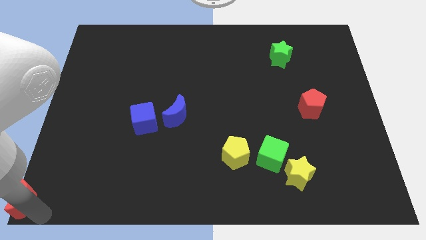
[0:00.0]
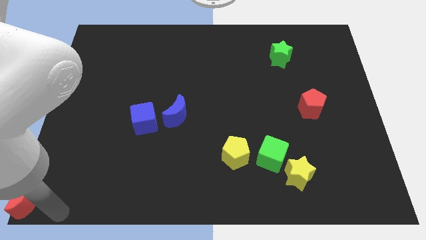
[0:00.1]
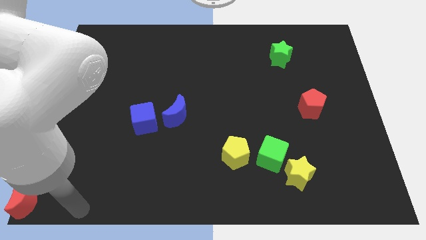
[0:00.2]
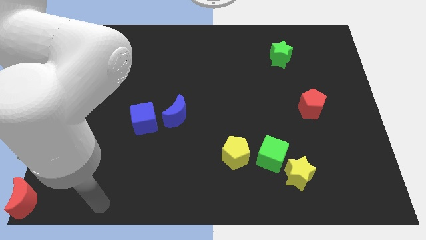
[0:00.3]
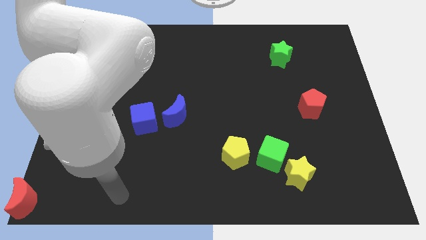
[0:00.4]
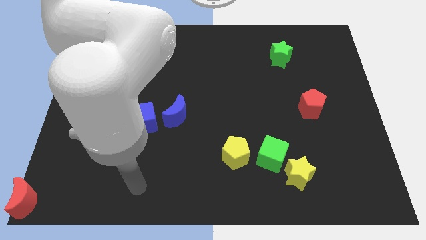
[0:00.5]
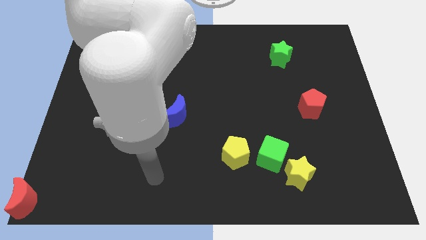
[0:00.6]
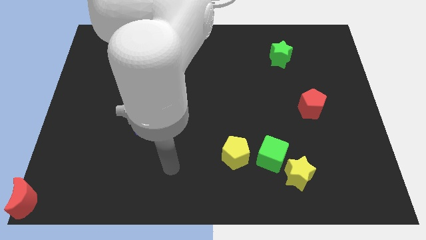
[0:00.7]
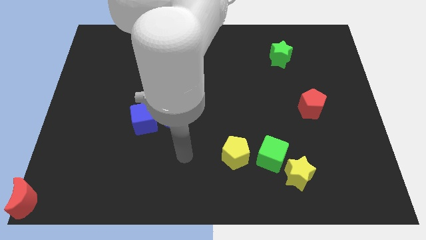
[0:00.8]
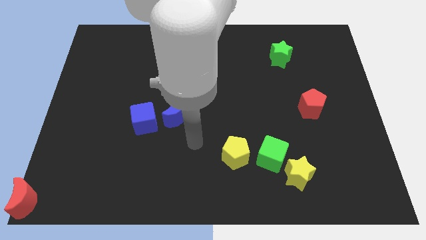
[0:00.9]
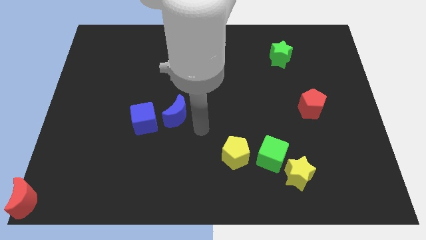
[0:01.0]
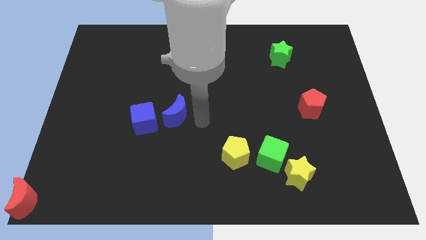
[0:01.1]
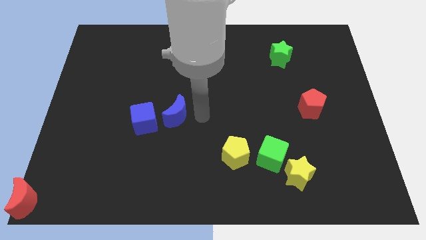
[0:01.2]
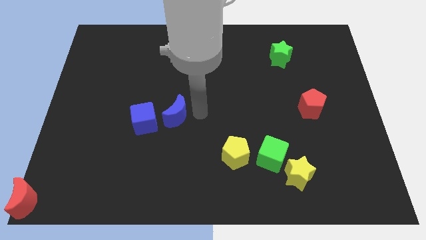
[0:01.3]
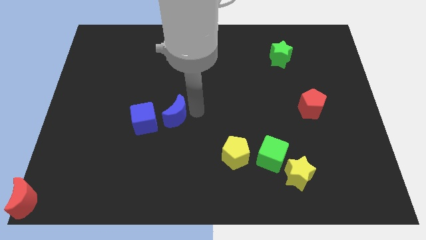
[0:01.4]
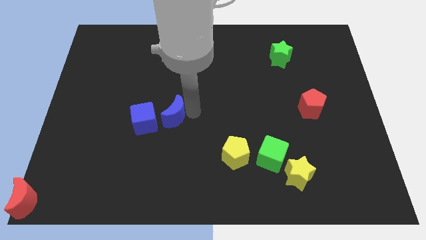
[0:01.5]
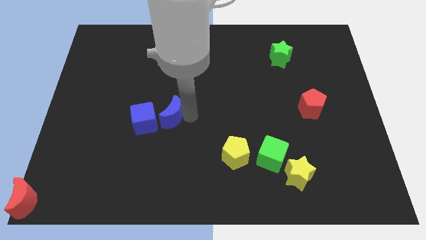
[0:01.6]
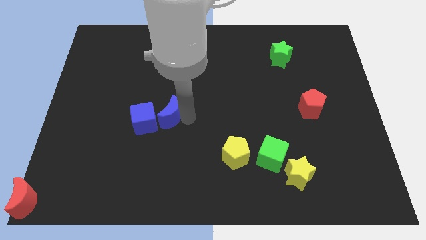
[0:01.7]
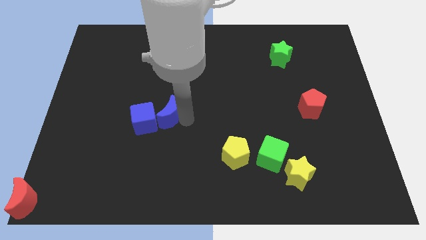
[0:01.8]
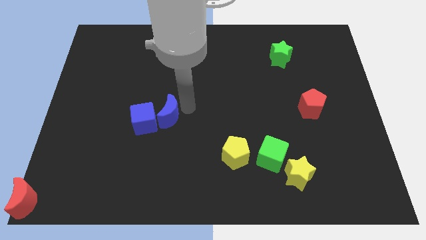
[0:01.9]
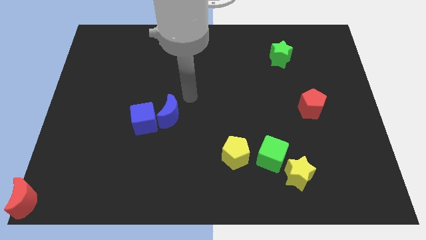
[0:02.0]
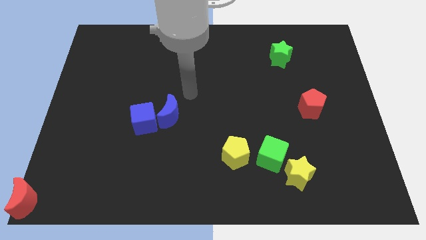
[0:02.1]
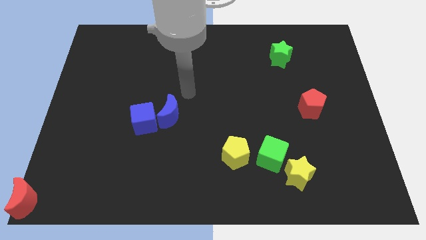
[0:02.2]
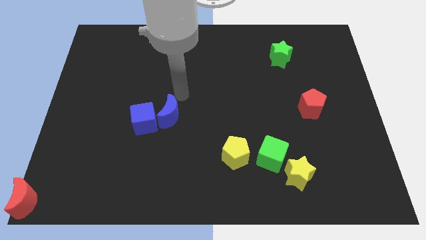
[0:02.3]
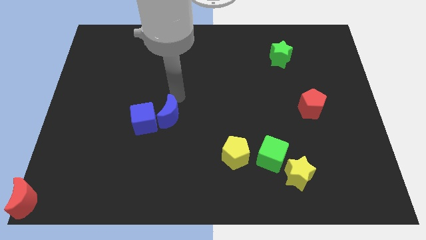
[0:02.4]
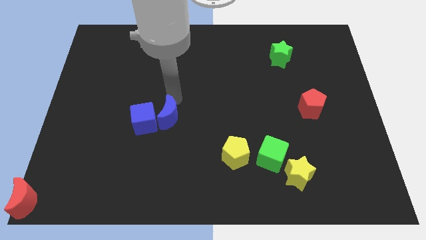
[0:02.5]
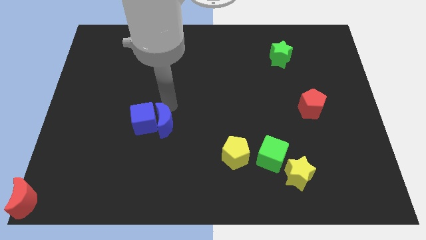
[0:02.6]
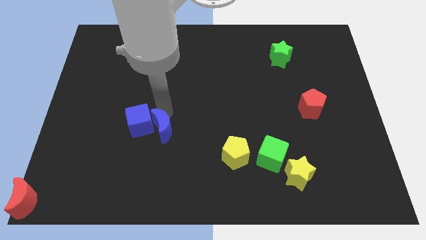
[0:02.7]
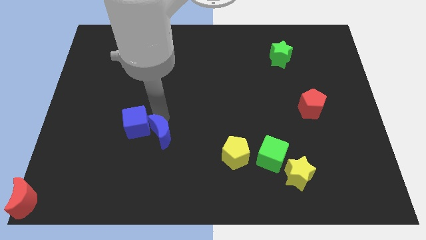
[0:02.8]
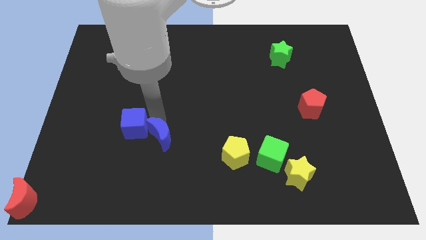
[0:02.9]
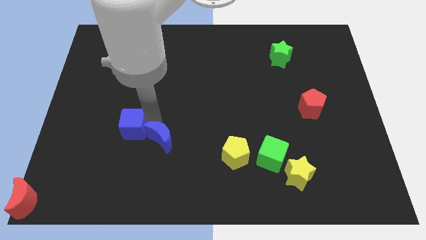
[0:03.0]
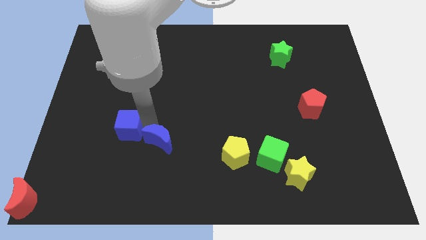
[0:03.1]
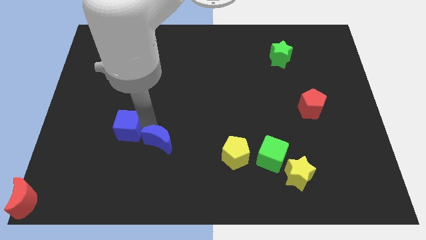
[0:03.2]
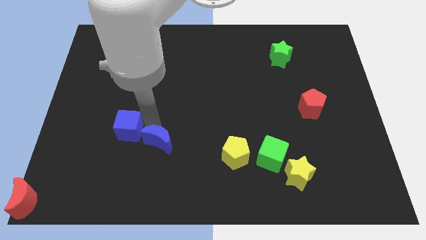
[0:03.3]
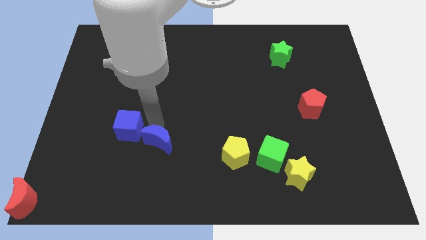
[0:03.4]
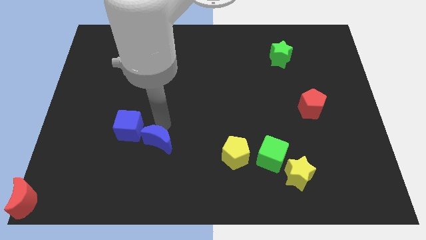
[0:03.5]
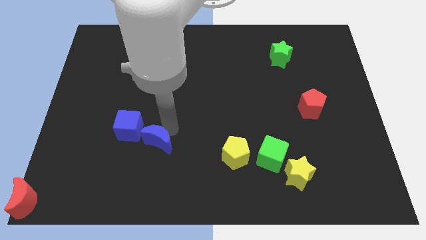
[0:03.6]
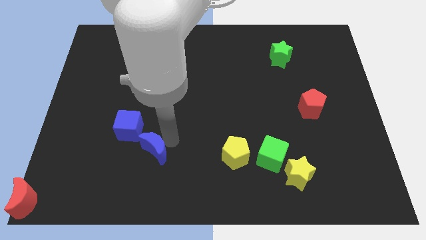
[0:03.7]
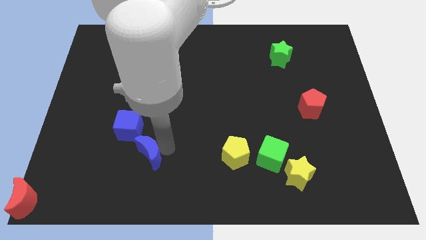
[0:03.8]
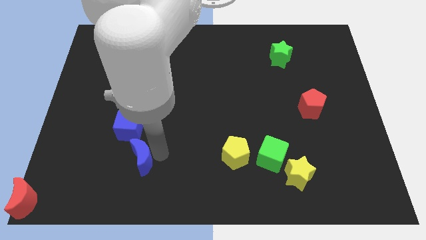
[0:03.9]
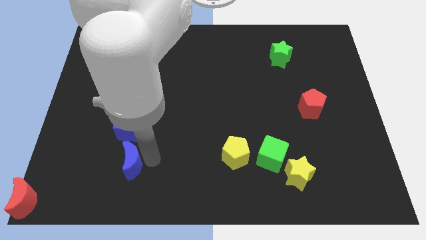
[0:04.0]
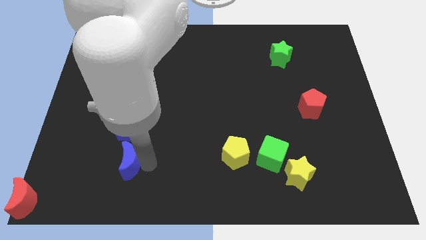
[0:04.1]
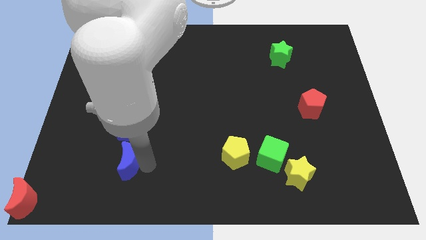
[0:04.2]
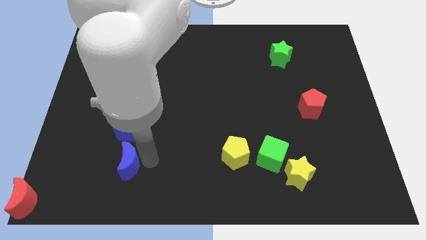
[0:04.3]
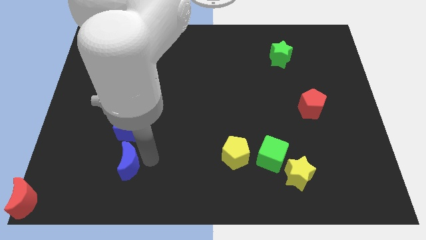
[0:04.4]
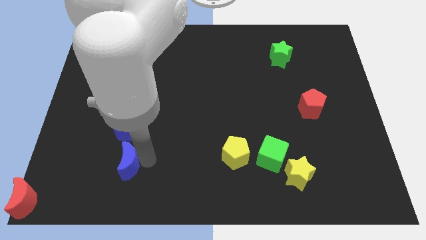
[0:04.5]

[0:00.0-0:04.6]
put the blue moon vertically below the blue cube

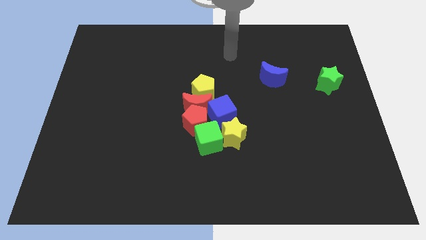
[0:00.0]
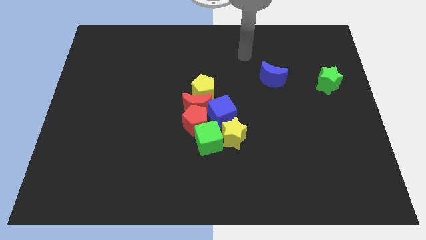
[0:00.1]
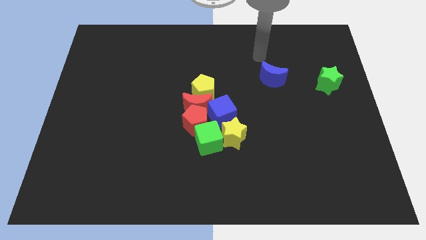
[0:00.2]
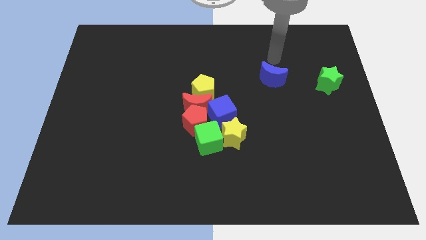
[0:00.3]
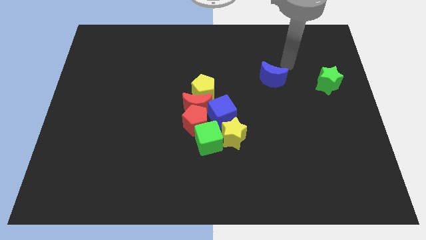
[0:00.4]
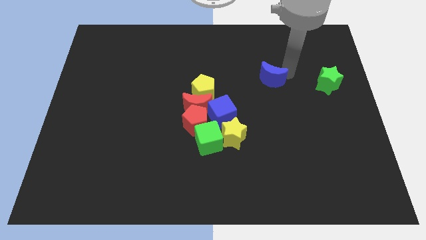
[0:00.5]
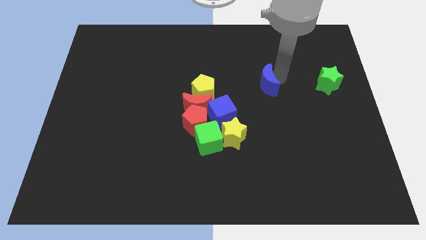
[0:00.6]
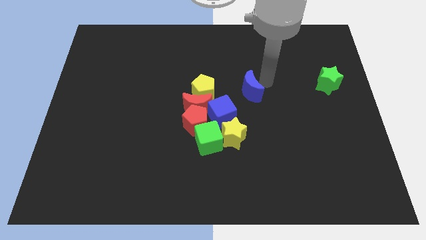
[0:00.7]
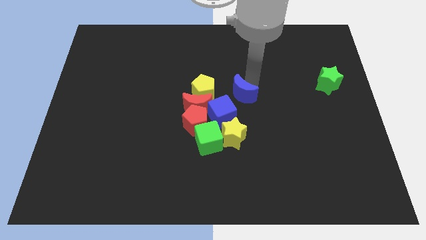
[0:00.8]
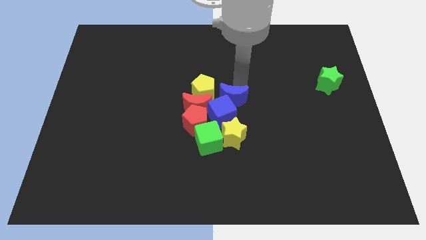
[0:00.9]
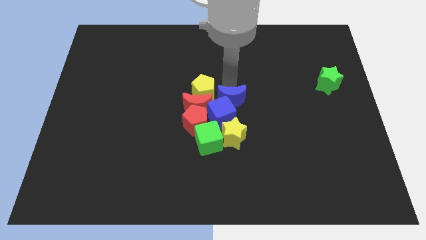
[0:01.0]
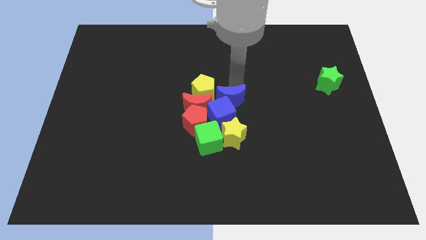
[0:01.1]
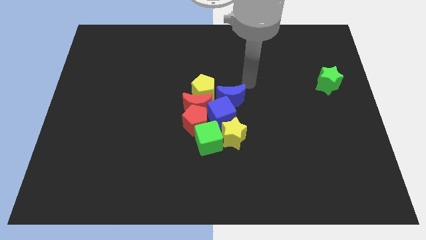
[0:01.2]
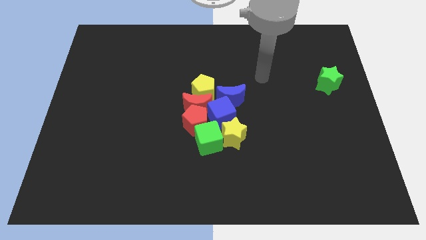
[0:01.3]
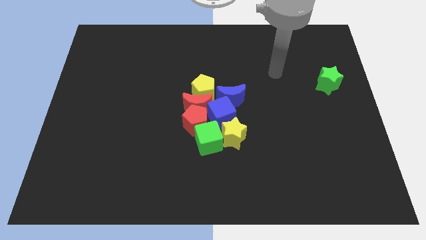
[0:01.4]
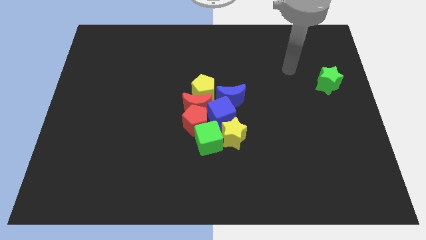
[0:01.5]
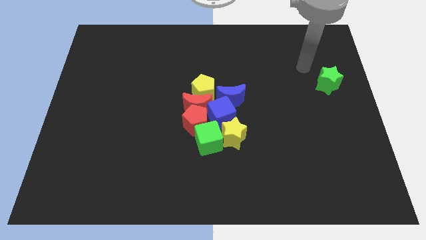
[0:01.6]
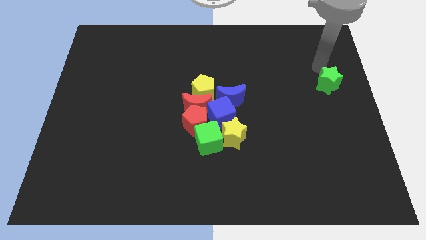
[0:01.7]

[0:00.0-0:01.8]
push the blue crescent to the top right corner of the blue cube

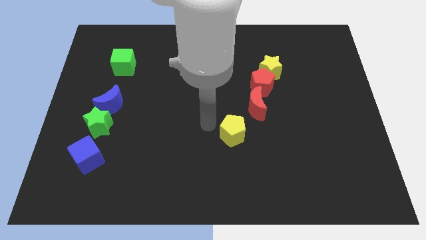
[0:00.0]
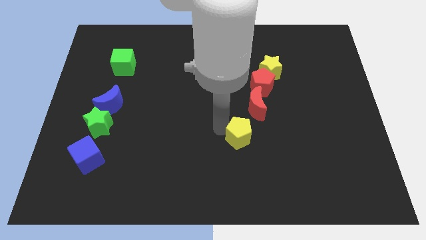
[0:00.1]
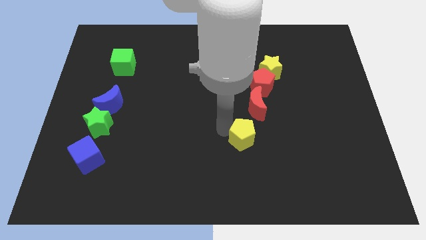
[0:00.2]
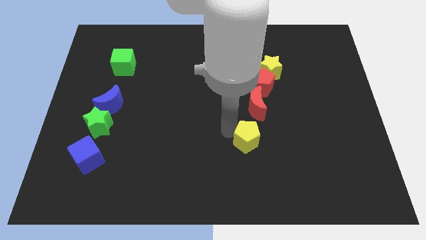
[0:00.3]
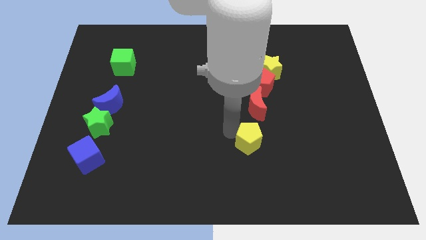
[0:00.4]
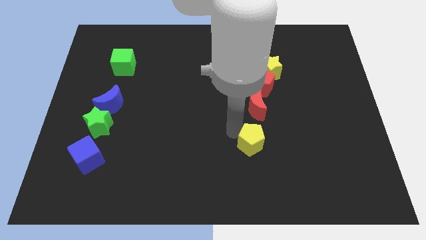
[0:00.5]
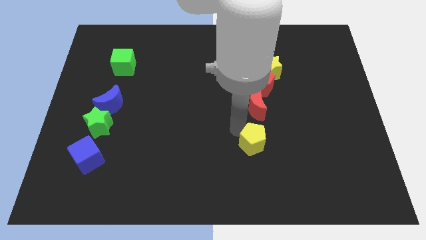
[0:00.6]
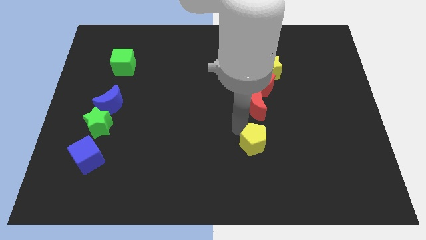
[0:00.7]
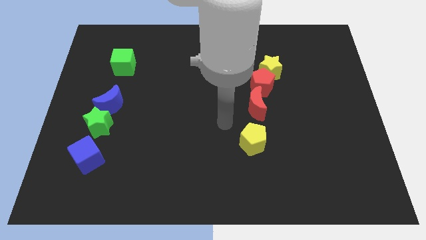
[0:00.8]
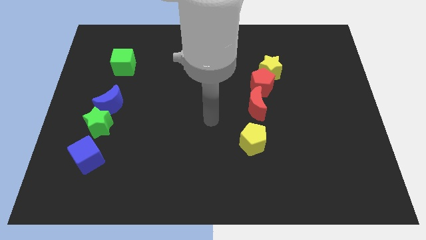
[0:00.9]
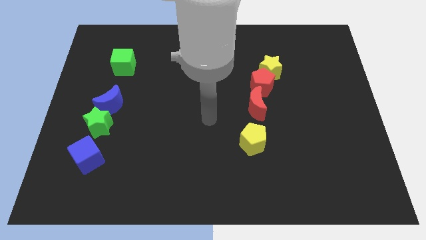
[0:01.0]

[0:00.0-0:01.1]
place yellow pentagon below red crescent

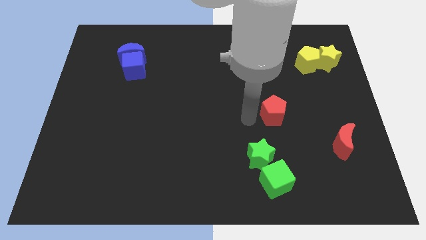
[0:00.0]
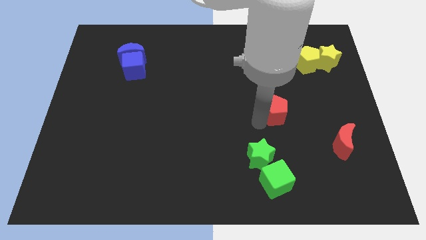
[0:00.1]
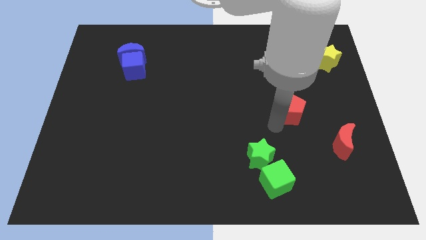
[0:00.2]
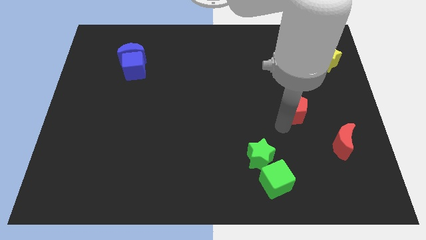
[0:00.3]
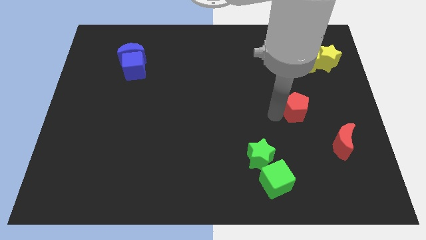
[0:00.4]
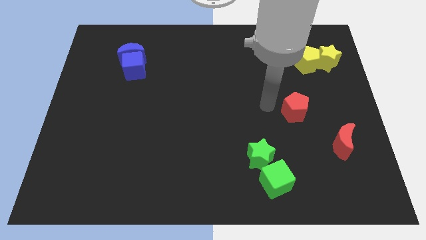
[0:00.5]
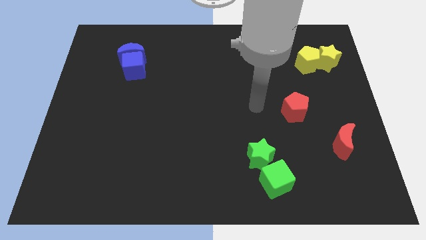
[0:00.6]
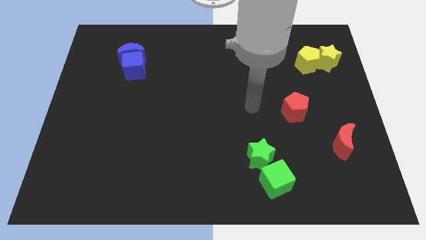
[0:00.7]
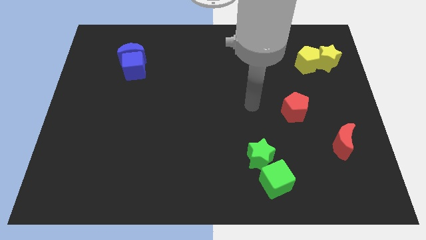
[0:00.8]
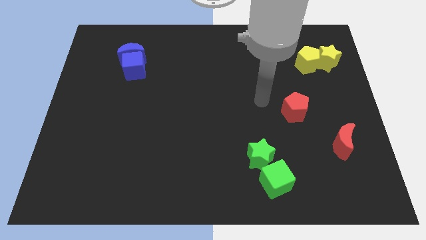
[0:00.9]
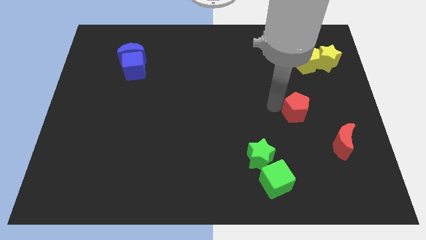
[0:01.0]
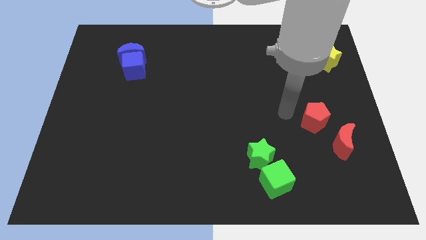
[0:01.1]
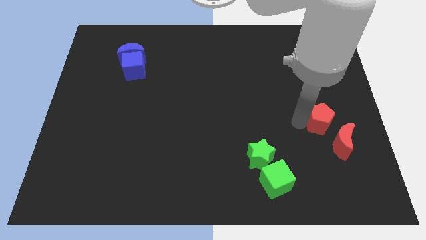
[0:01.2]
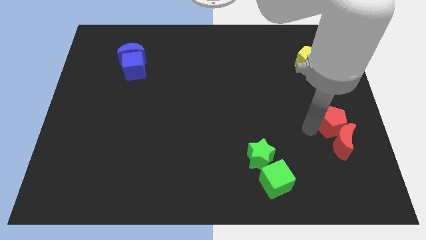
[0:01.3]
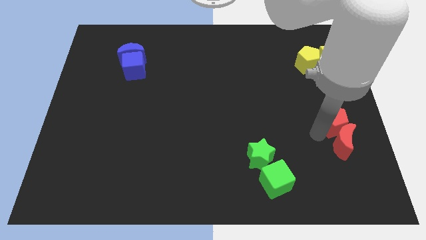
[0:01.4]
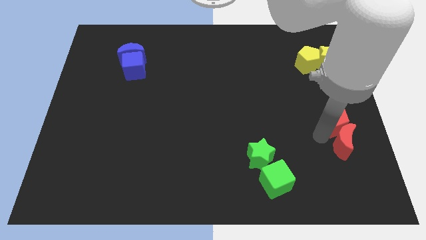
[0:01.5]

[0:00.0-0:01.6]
push the red pentagon into the red moon
